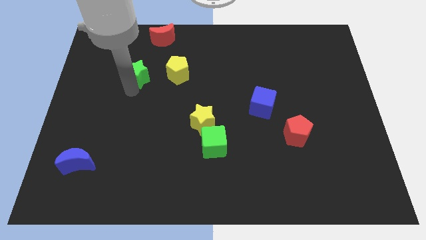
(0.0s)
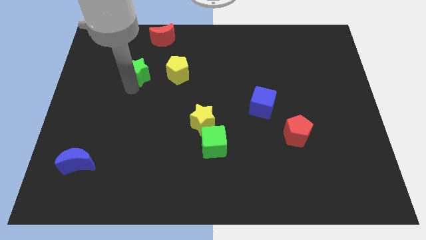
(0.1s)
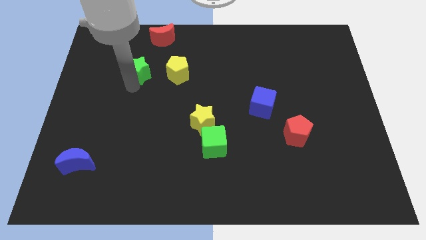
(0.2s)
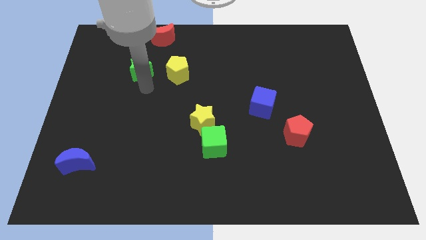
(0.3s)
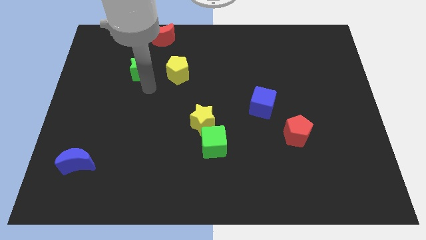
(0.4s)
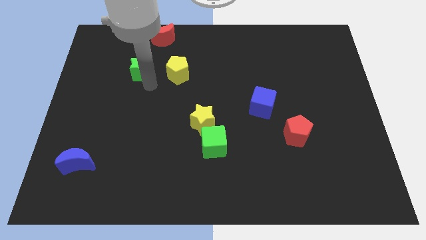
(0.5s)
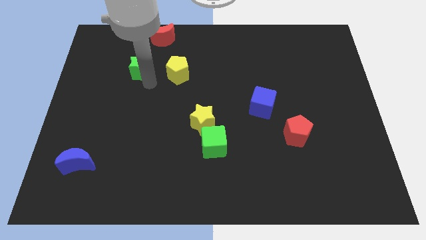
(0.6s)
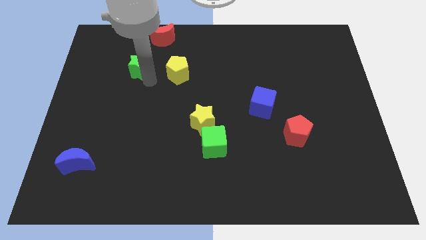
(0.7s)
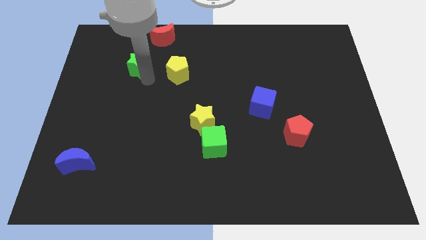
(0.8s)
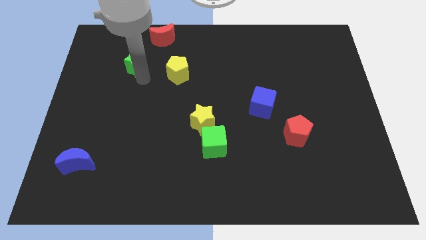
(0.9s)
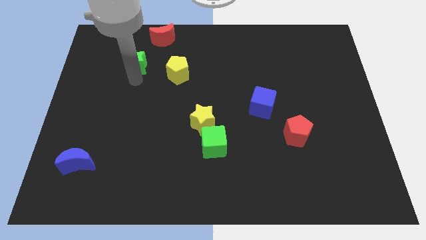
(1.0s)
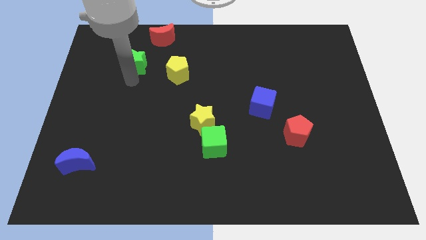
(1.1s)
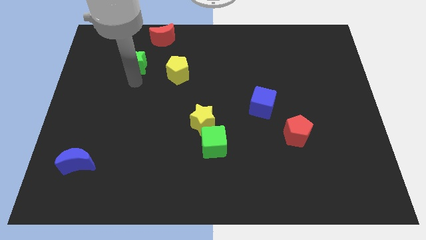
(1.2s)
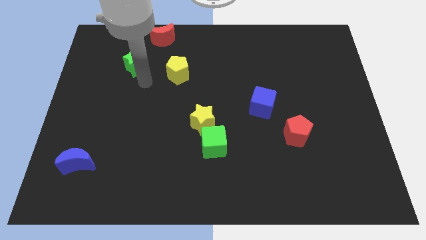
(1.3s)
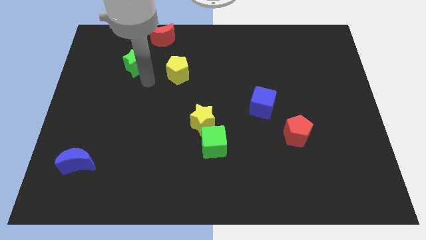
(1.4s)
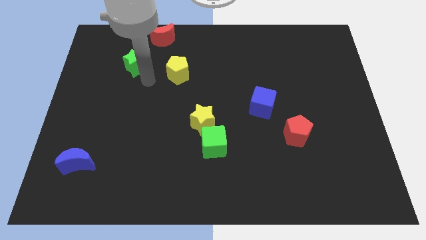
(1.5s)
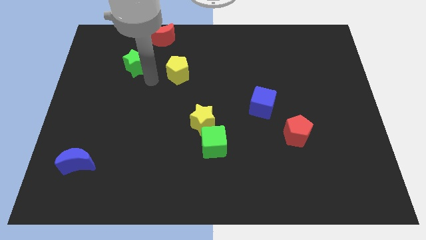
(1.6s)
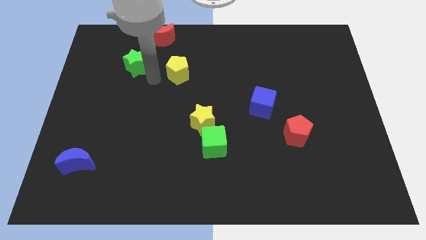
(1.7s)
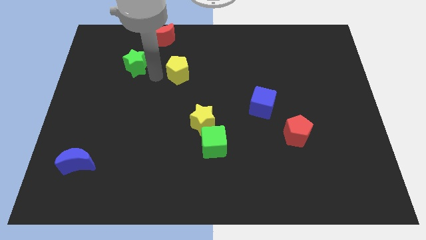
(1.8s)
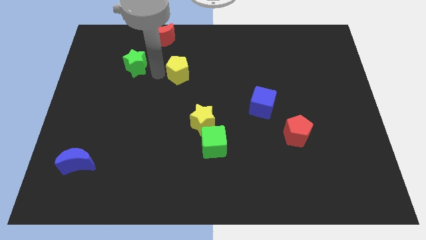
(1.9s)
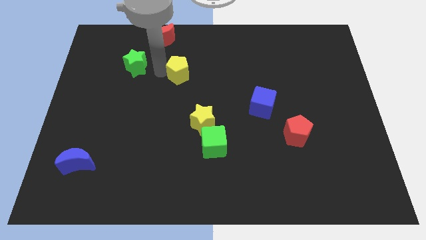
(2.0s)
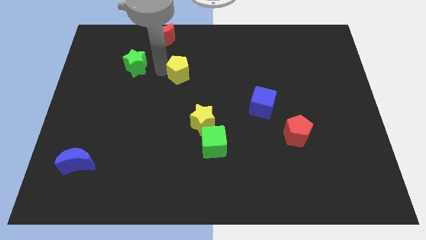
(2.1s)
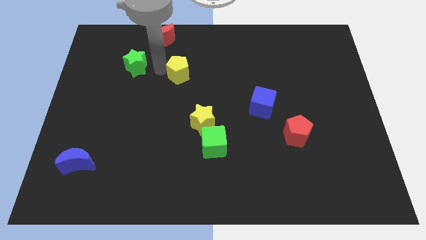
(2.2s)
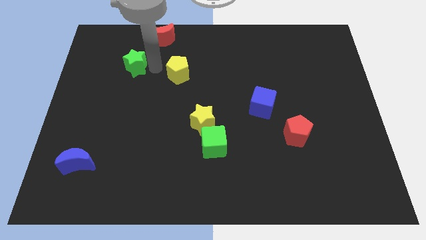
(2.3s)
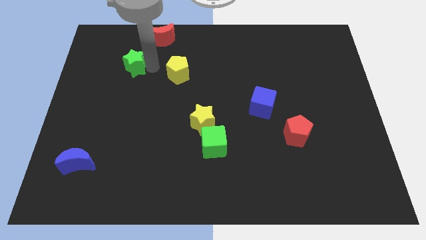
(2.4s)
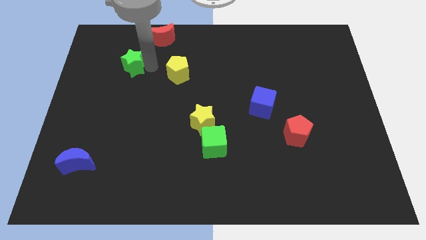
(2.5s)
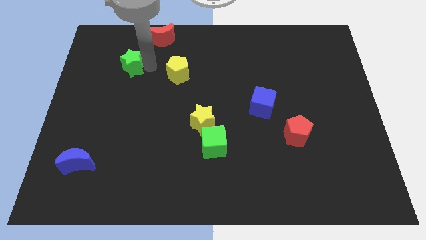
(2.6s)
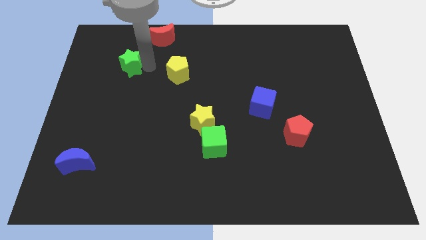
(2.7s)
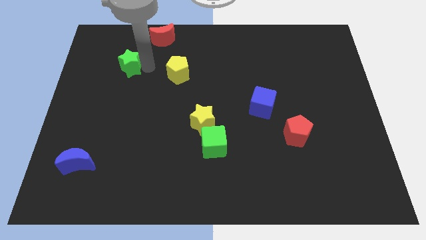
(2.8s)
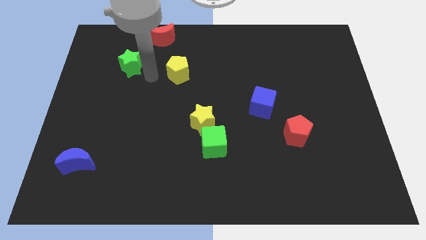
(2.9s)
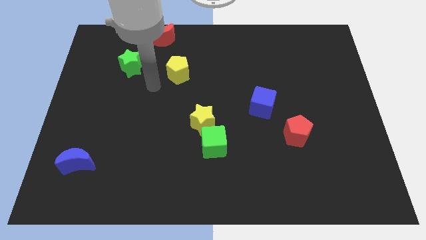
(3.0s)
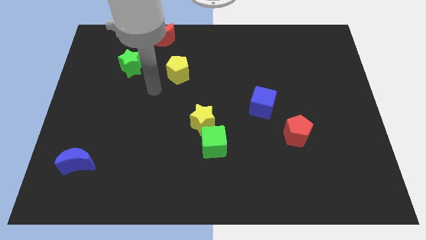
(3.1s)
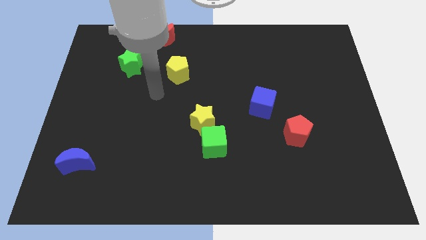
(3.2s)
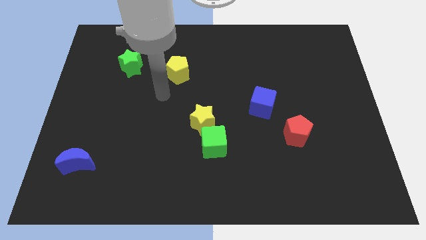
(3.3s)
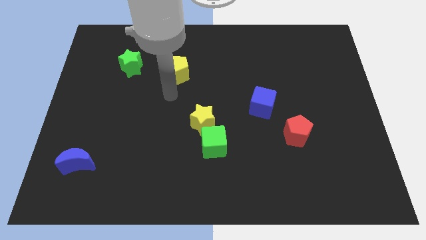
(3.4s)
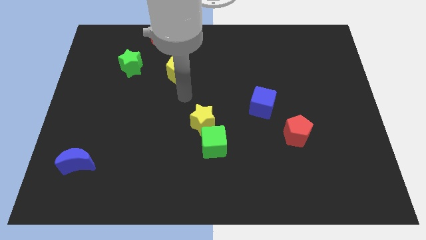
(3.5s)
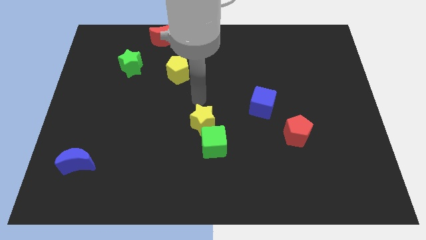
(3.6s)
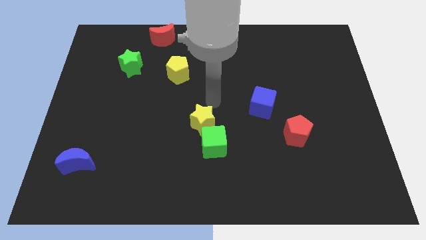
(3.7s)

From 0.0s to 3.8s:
slightly move the green star to the left of the board

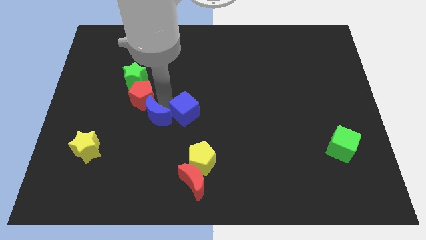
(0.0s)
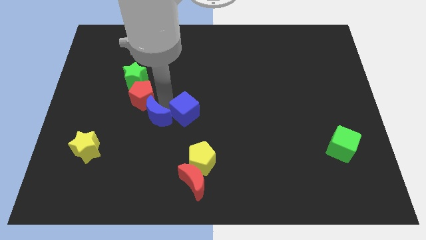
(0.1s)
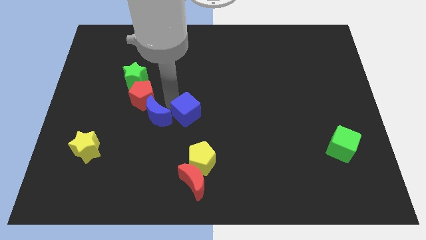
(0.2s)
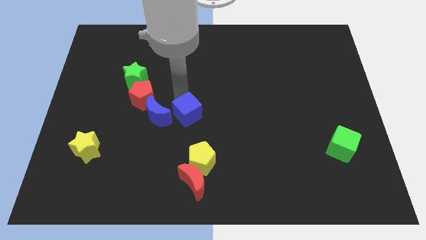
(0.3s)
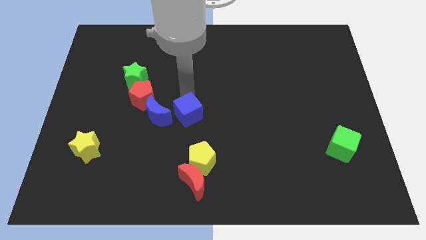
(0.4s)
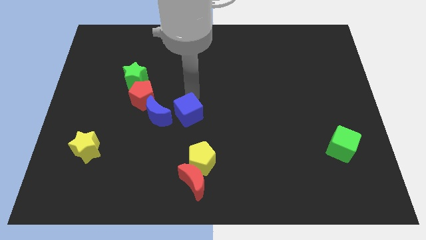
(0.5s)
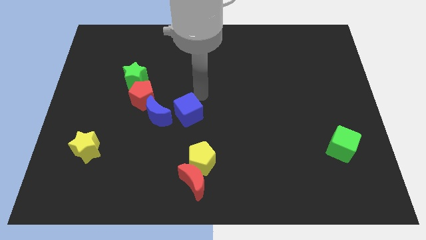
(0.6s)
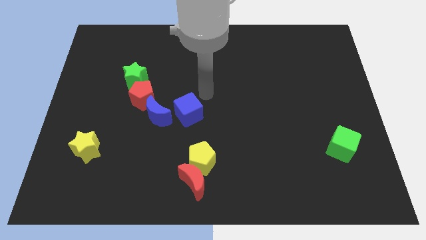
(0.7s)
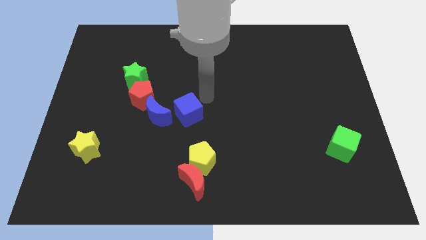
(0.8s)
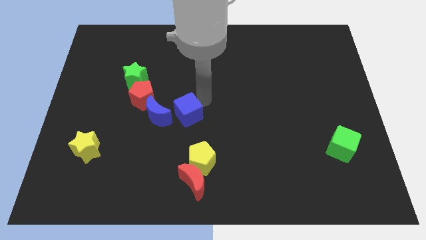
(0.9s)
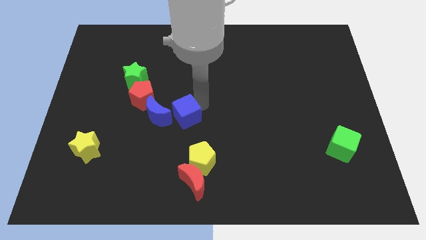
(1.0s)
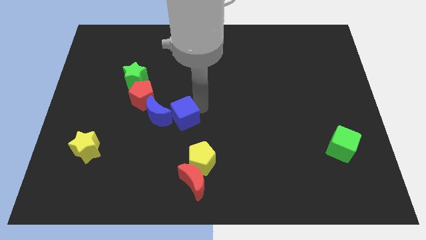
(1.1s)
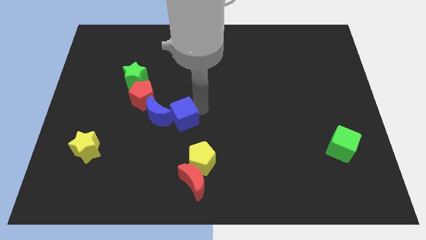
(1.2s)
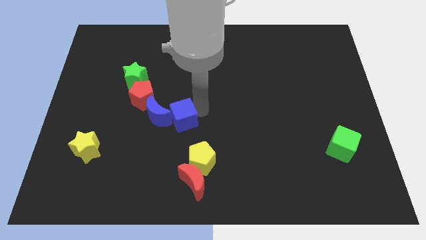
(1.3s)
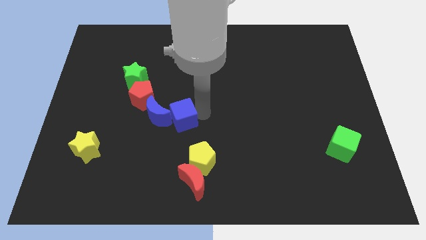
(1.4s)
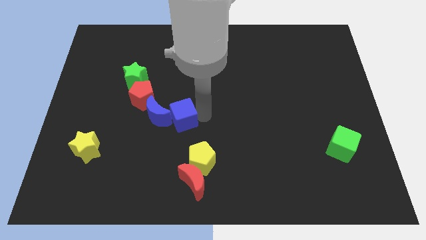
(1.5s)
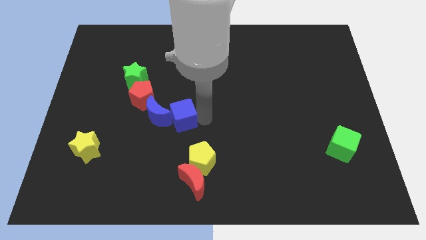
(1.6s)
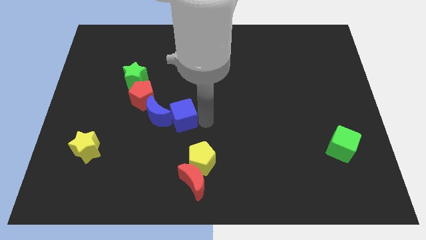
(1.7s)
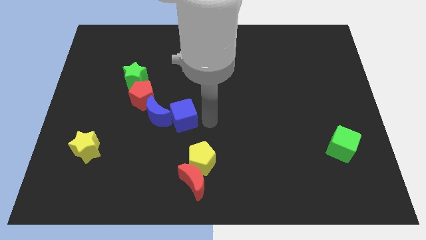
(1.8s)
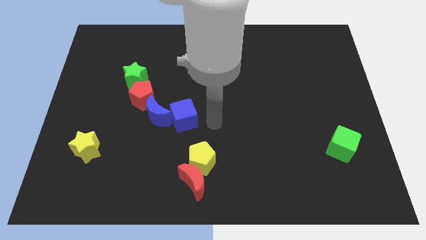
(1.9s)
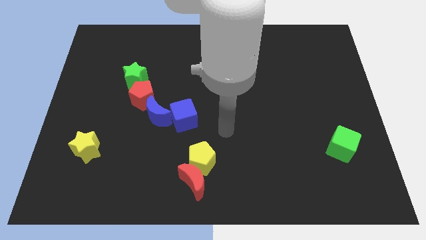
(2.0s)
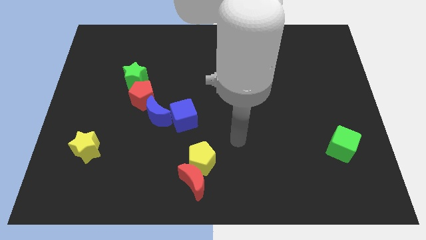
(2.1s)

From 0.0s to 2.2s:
push the blue cube diagonally above yellow pentagon

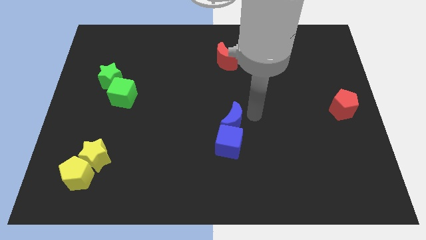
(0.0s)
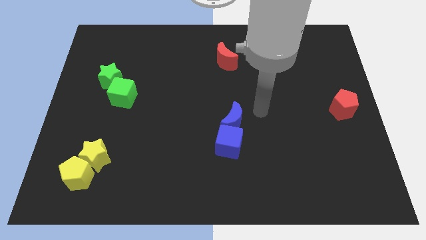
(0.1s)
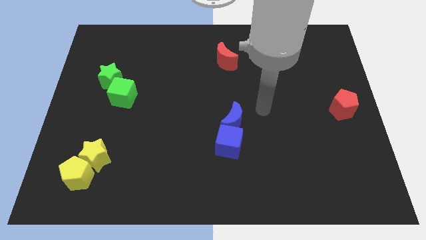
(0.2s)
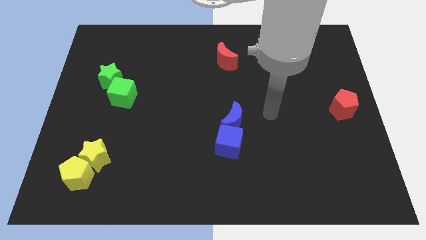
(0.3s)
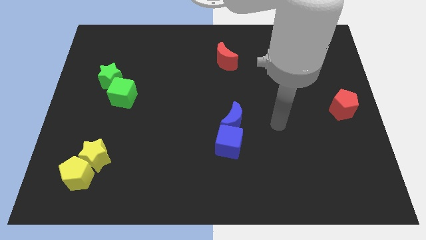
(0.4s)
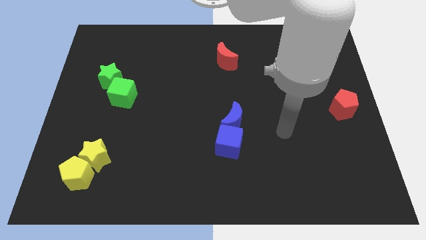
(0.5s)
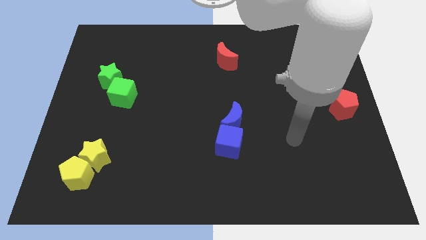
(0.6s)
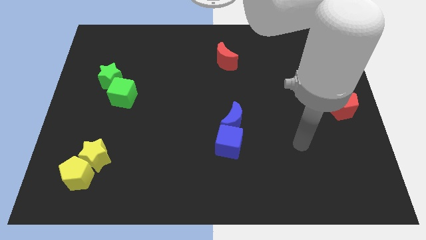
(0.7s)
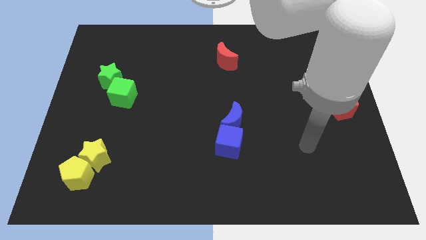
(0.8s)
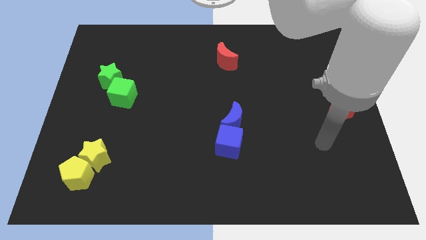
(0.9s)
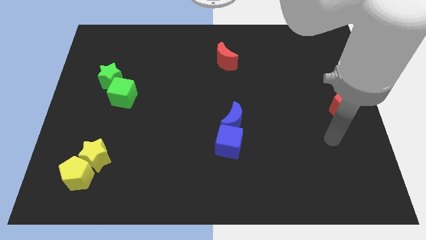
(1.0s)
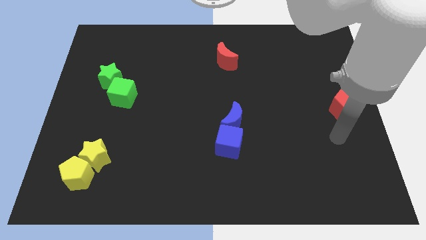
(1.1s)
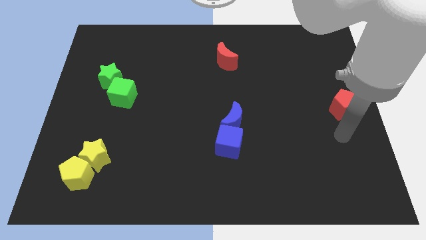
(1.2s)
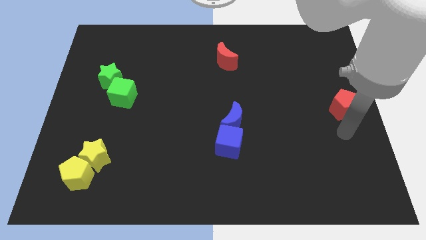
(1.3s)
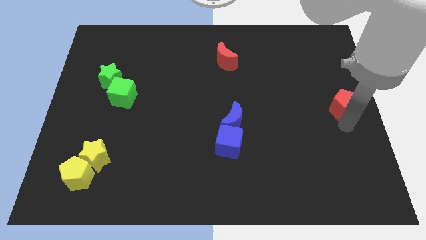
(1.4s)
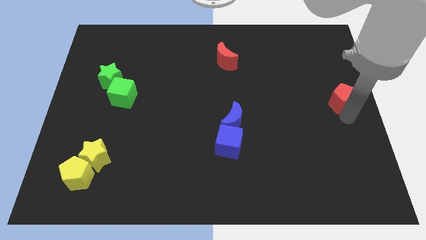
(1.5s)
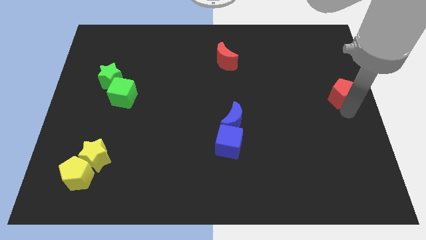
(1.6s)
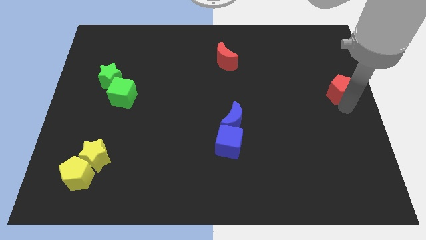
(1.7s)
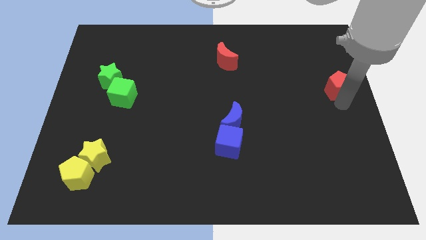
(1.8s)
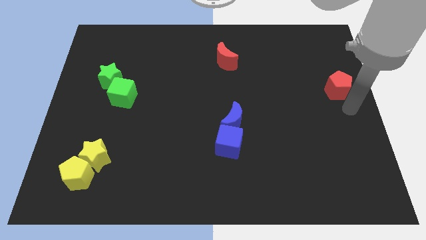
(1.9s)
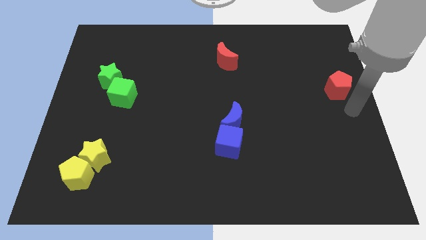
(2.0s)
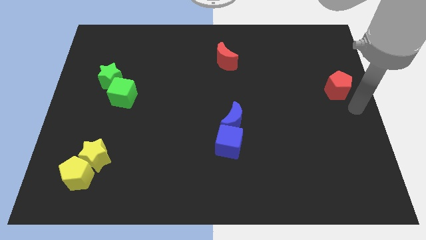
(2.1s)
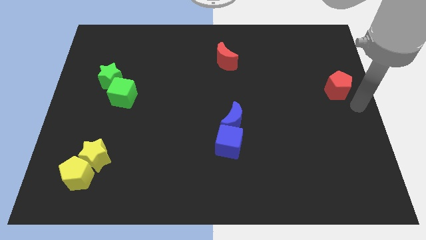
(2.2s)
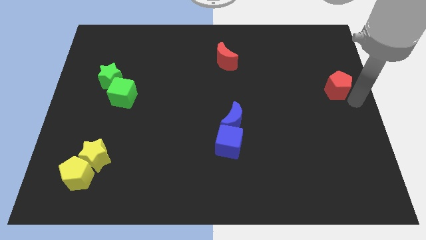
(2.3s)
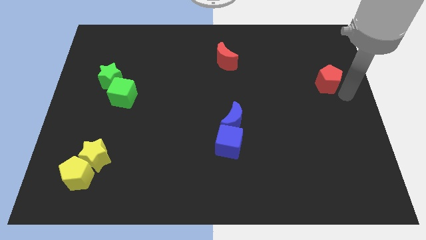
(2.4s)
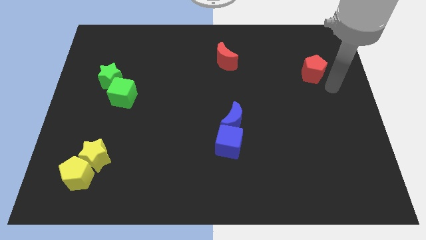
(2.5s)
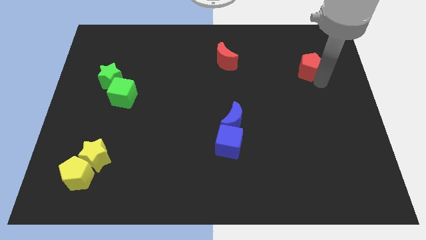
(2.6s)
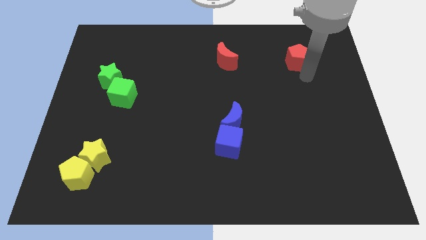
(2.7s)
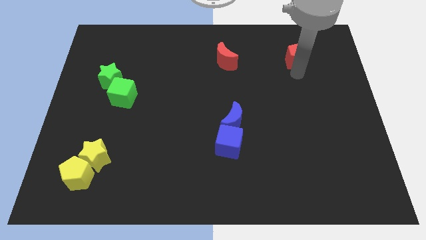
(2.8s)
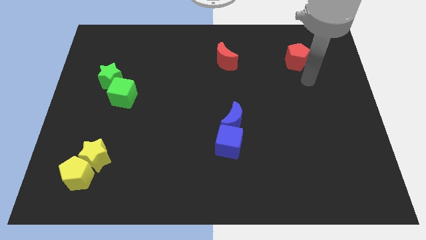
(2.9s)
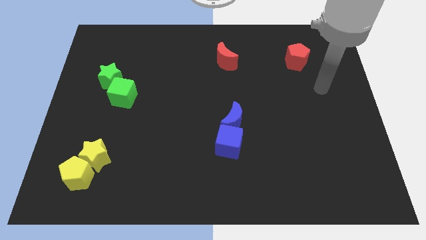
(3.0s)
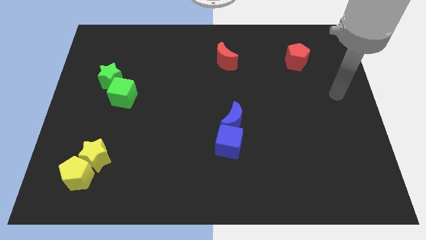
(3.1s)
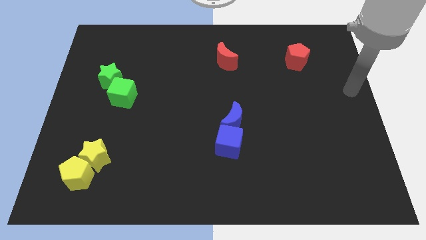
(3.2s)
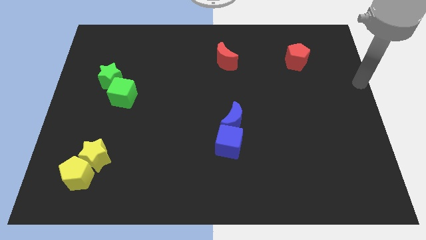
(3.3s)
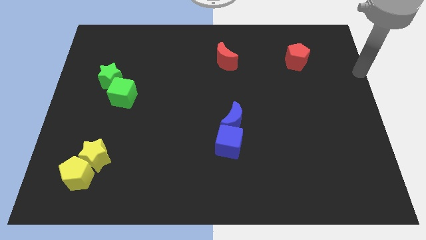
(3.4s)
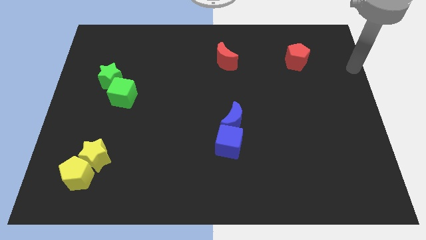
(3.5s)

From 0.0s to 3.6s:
place the red pentagon parallel right to the red moon
